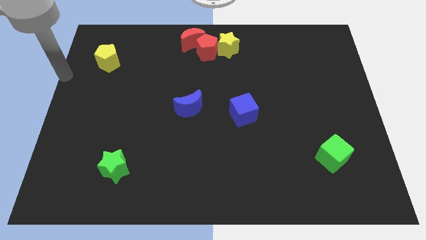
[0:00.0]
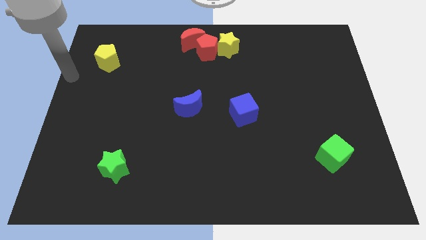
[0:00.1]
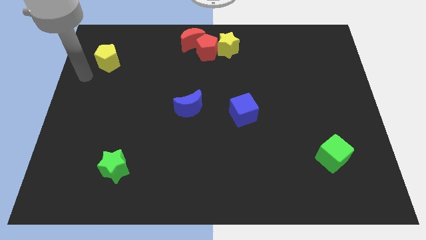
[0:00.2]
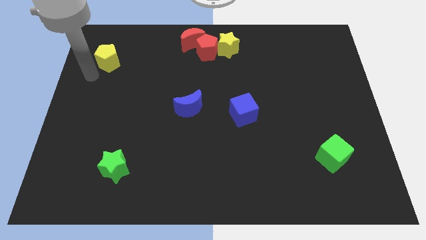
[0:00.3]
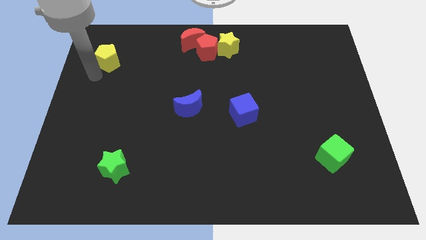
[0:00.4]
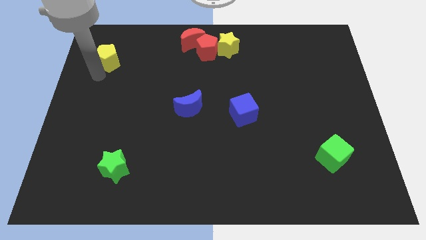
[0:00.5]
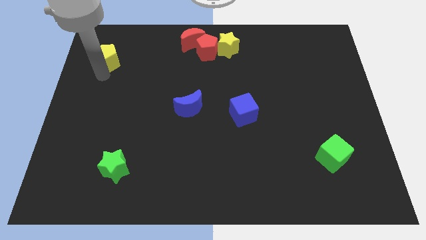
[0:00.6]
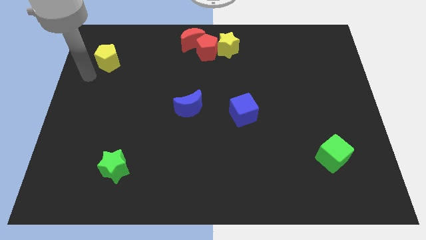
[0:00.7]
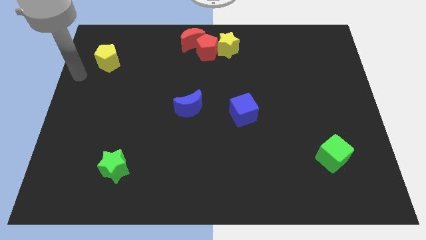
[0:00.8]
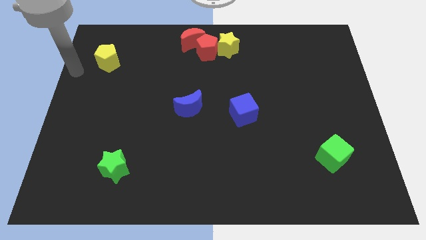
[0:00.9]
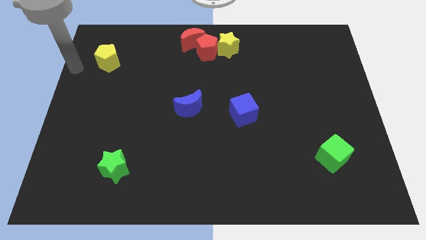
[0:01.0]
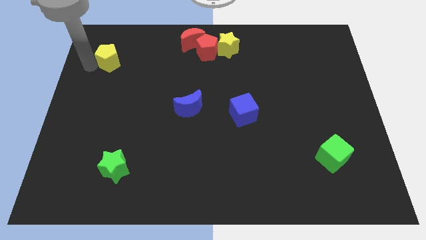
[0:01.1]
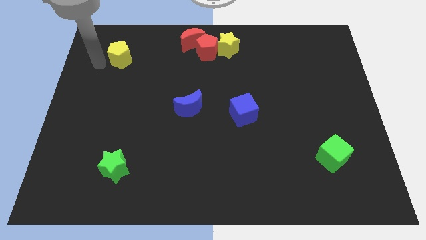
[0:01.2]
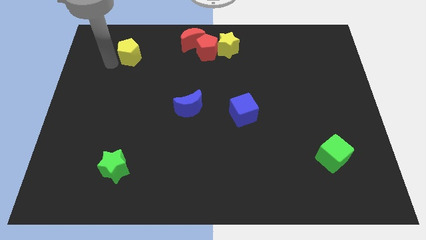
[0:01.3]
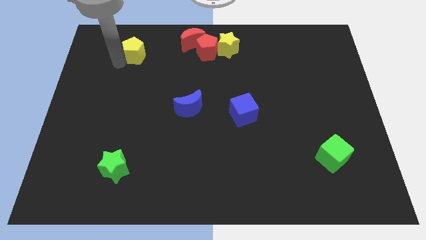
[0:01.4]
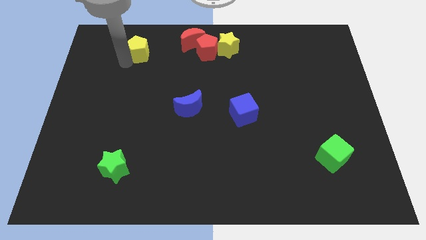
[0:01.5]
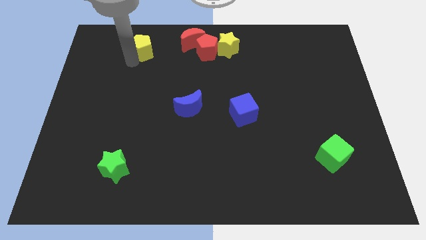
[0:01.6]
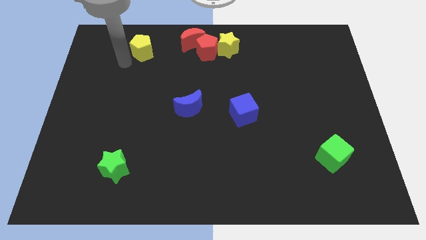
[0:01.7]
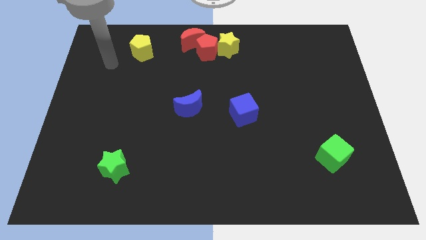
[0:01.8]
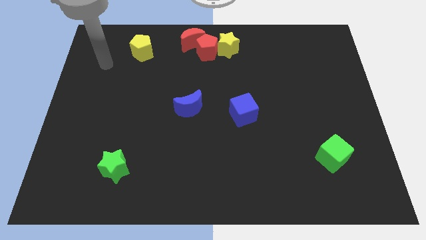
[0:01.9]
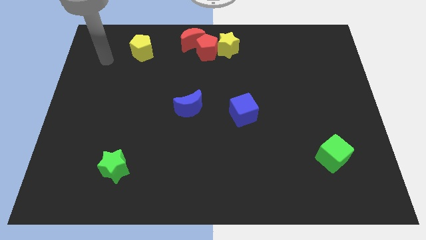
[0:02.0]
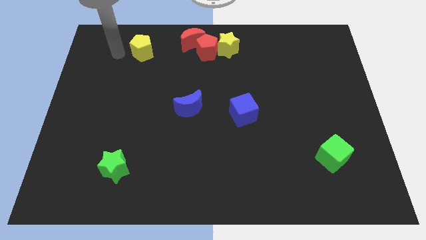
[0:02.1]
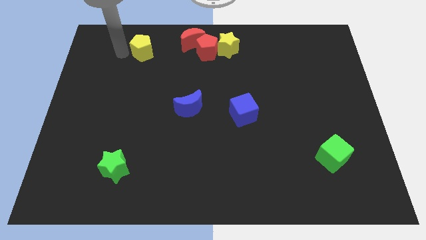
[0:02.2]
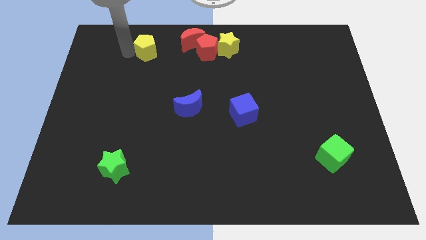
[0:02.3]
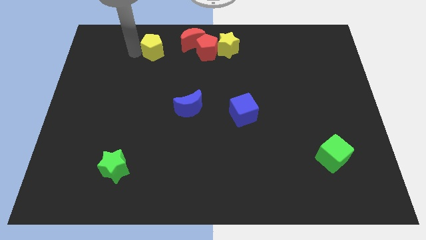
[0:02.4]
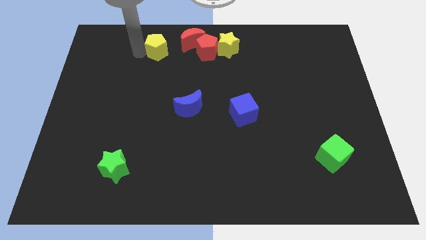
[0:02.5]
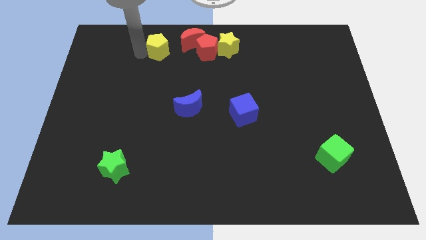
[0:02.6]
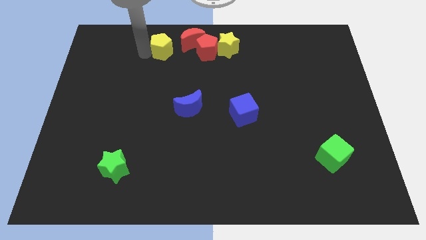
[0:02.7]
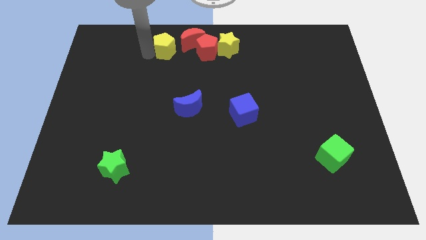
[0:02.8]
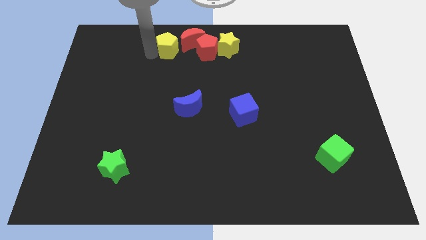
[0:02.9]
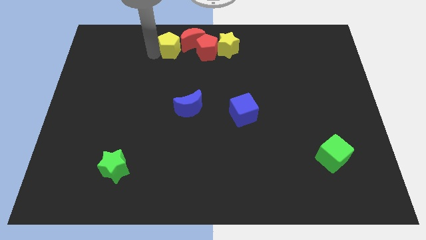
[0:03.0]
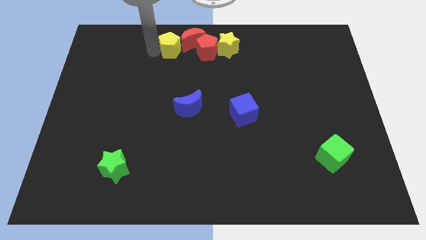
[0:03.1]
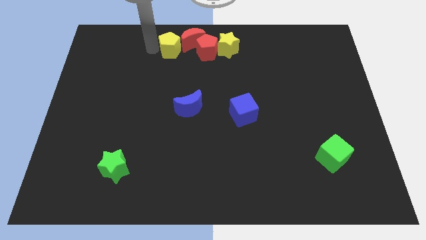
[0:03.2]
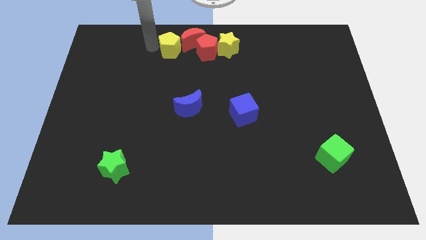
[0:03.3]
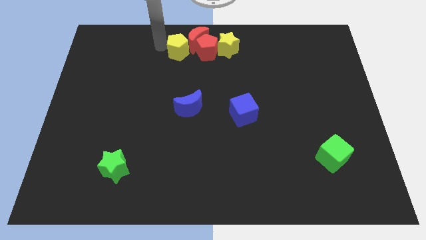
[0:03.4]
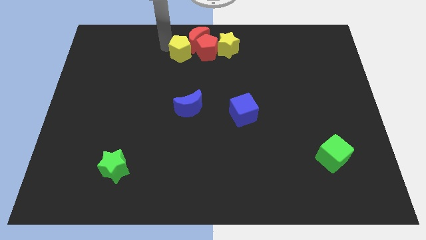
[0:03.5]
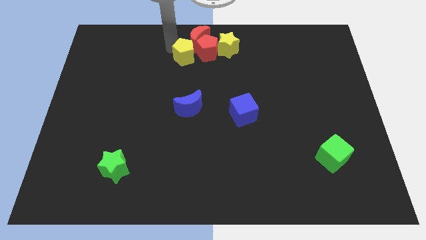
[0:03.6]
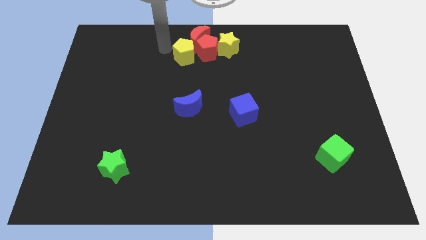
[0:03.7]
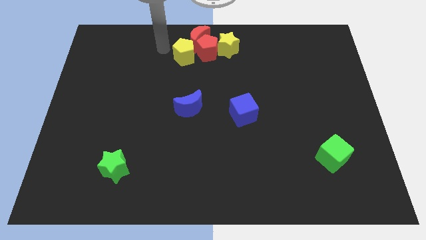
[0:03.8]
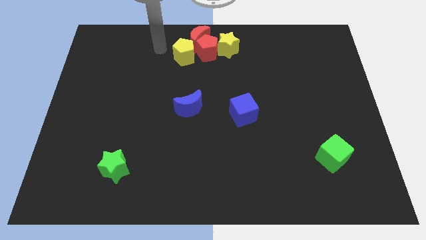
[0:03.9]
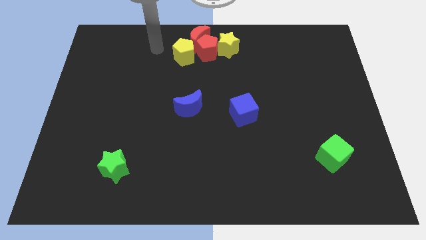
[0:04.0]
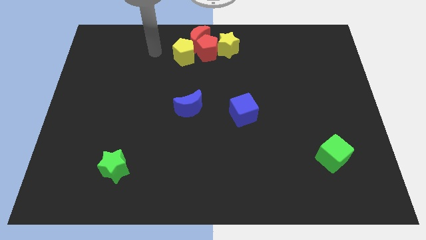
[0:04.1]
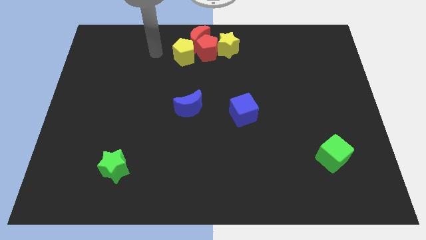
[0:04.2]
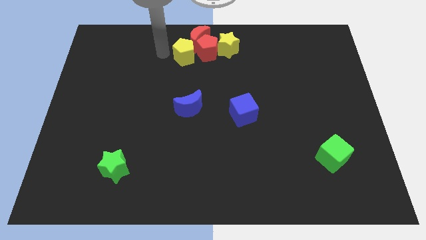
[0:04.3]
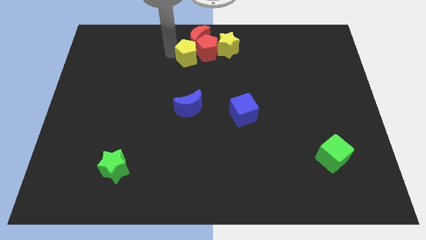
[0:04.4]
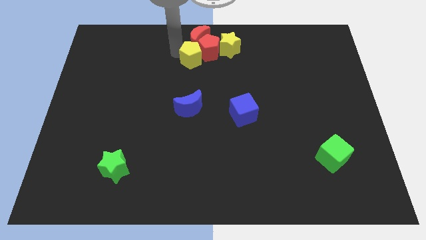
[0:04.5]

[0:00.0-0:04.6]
push the yellow pentagon into the red moon

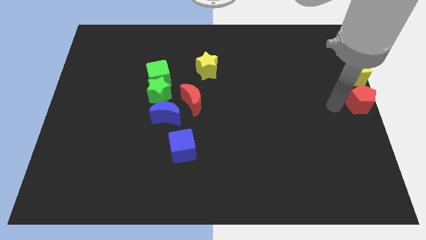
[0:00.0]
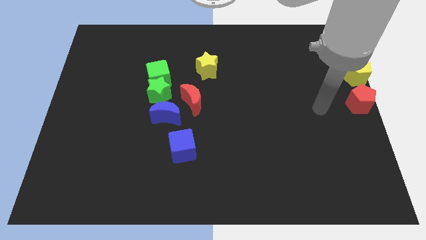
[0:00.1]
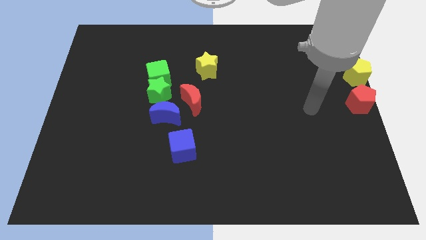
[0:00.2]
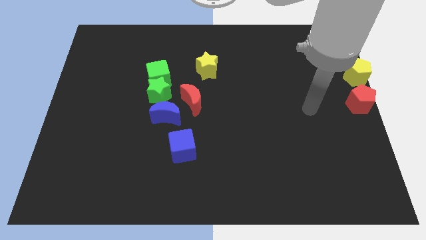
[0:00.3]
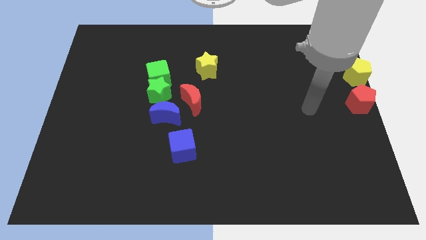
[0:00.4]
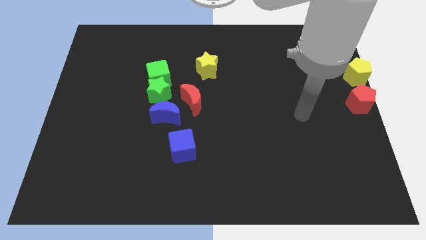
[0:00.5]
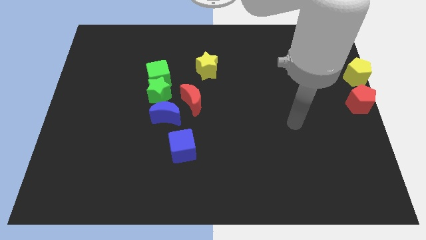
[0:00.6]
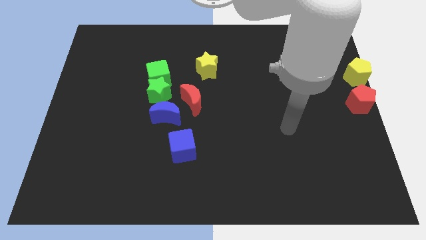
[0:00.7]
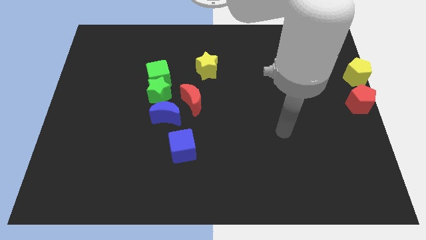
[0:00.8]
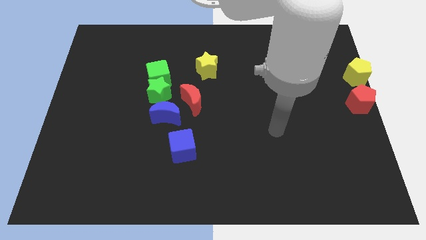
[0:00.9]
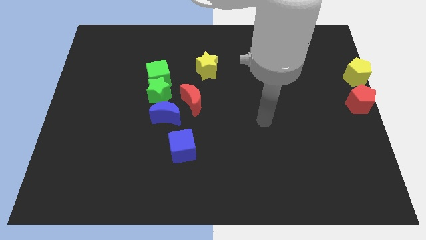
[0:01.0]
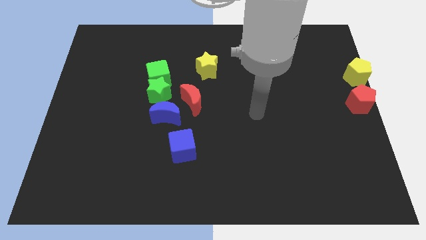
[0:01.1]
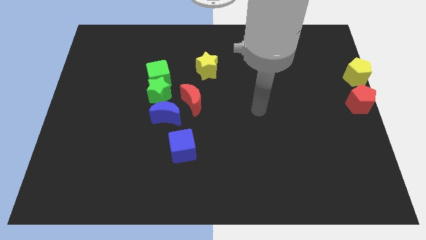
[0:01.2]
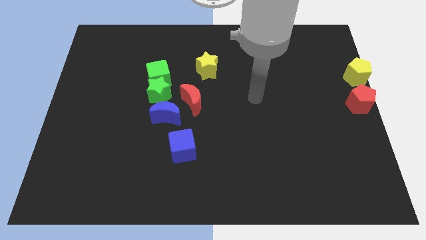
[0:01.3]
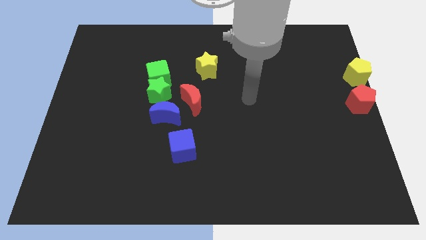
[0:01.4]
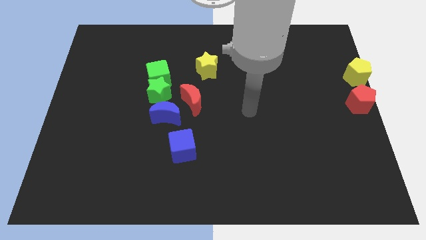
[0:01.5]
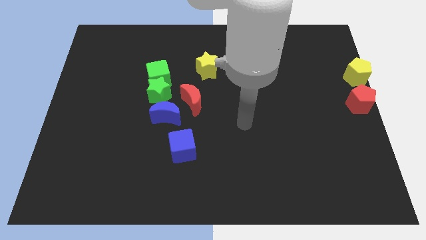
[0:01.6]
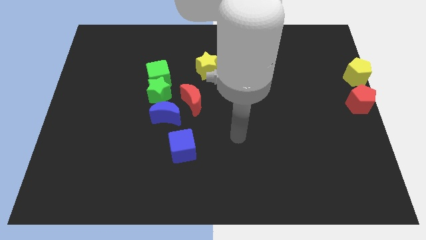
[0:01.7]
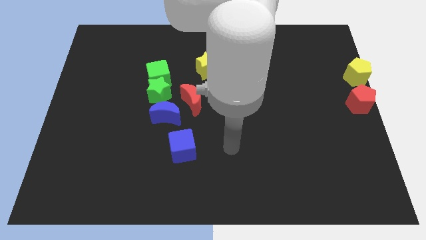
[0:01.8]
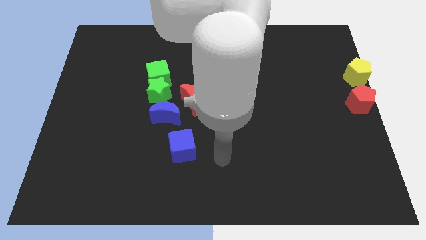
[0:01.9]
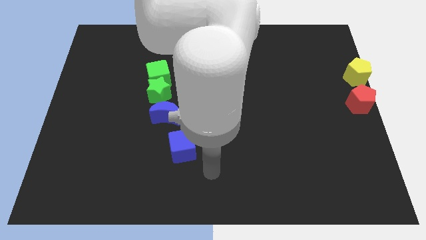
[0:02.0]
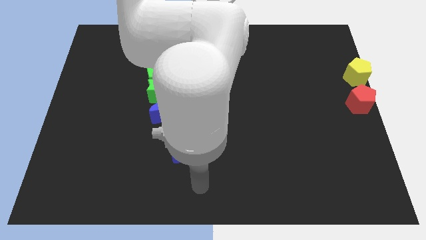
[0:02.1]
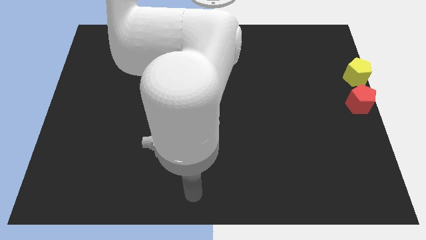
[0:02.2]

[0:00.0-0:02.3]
point your arm below the blue cube

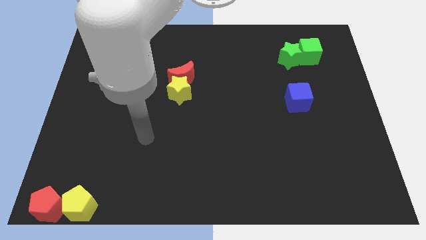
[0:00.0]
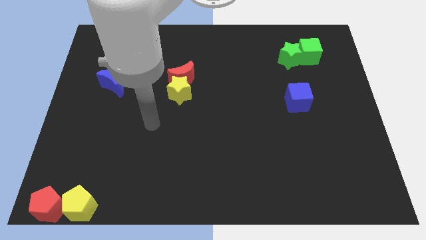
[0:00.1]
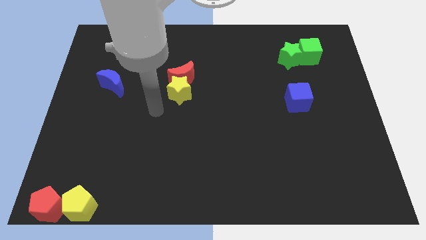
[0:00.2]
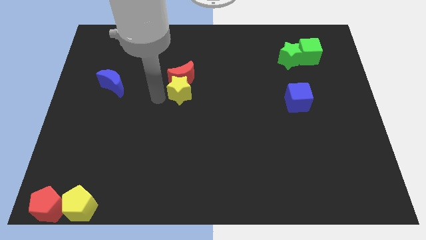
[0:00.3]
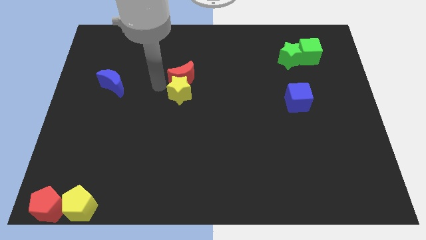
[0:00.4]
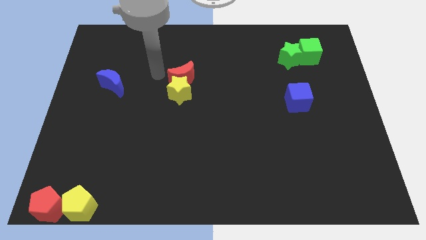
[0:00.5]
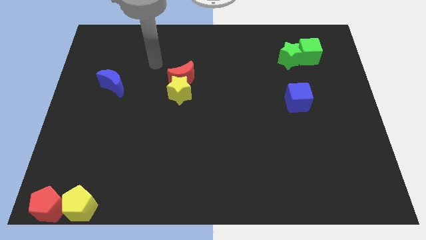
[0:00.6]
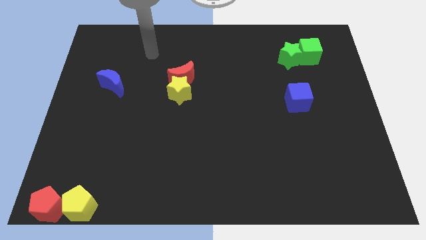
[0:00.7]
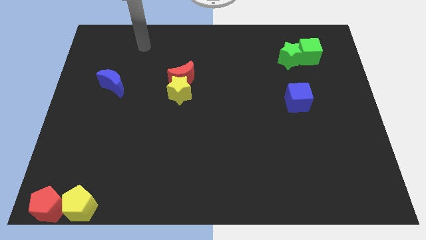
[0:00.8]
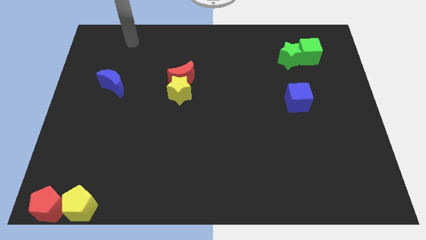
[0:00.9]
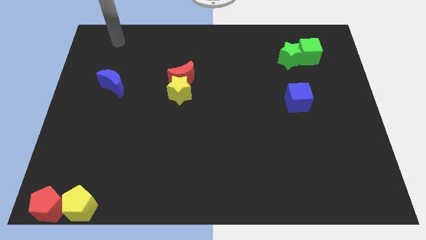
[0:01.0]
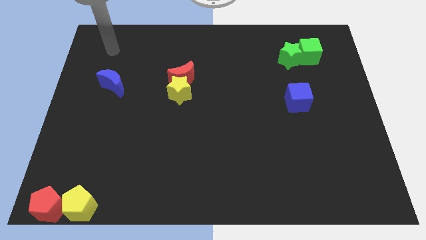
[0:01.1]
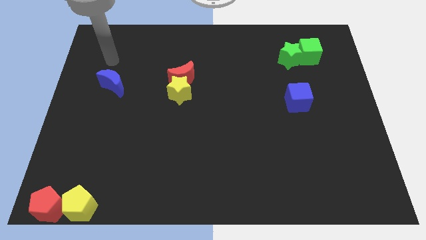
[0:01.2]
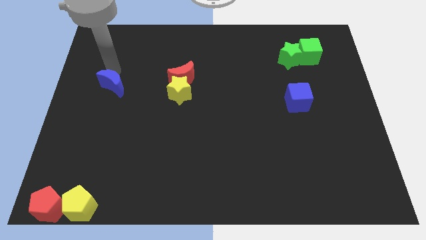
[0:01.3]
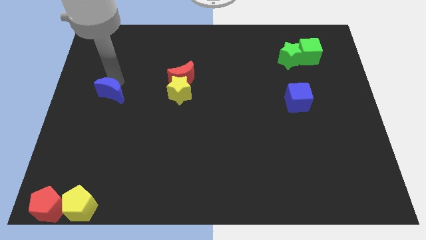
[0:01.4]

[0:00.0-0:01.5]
move the arm to the blue crescent

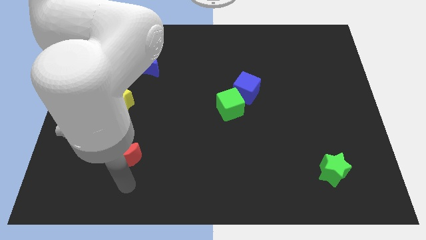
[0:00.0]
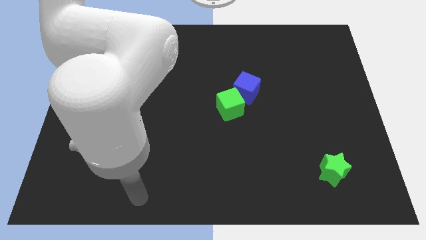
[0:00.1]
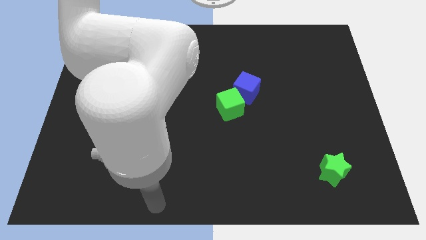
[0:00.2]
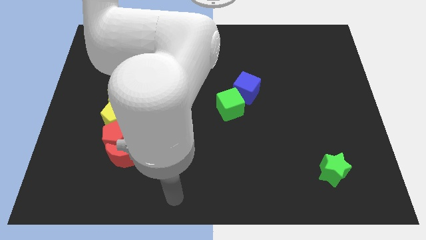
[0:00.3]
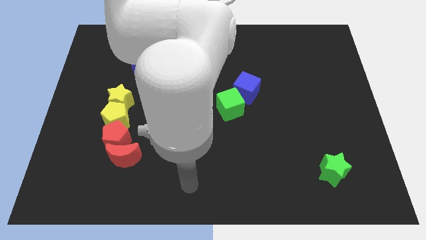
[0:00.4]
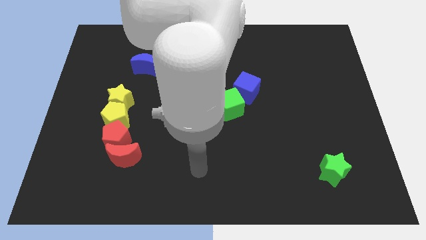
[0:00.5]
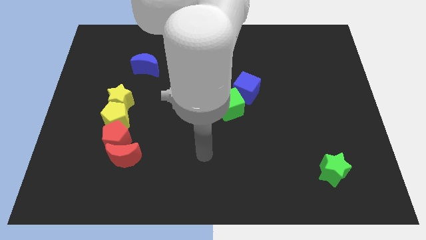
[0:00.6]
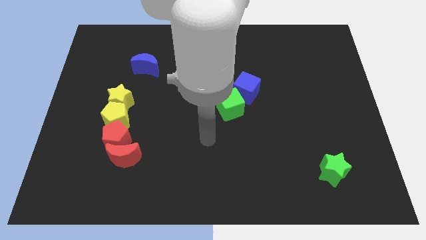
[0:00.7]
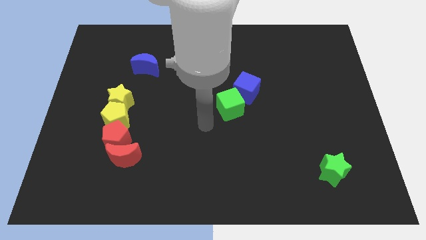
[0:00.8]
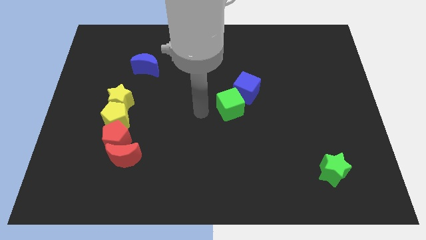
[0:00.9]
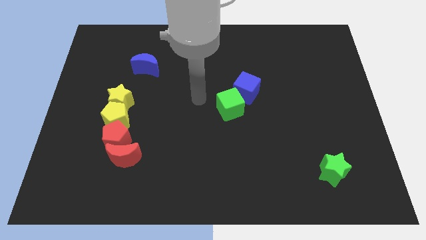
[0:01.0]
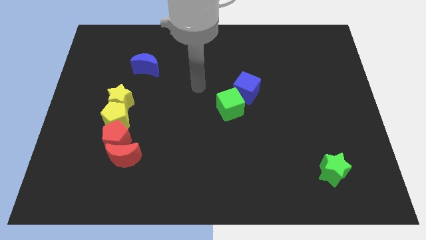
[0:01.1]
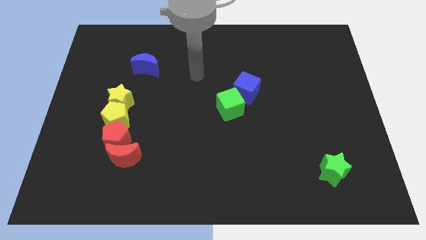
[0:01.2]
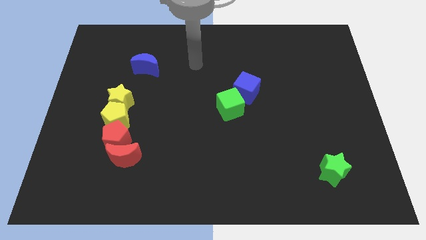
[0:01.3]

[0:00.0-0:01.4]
slide your arm towards top center
